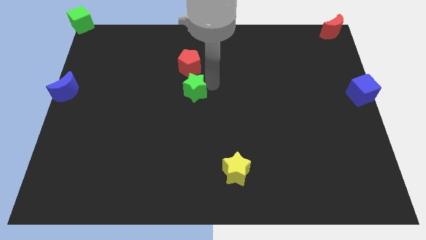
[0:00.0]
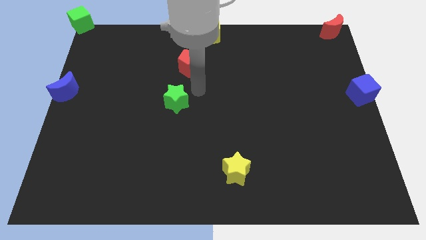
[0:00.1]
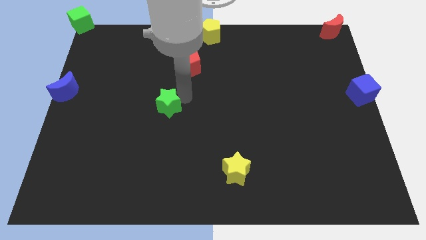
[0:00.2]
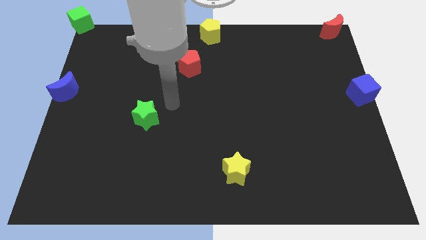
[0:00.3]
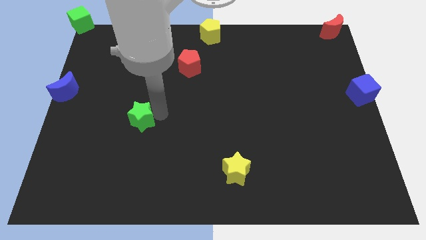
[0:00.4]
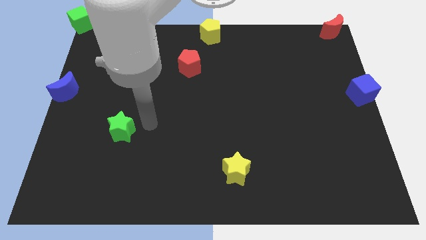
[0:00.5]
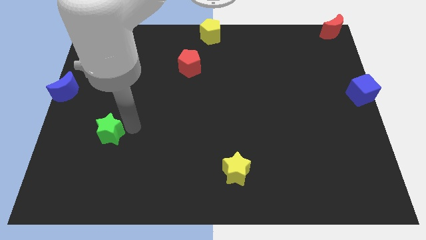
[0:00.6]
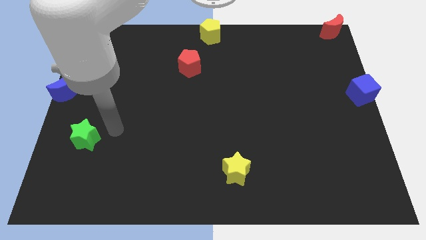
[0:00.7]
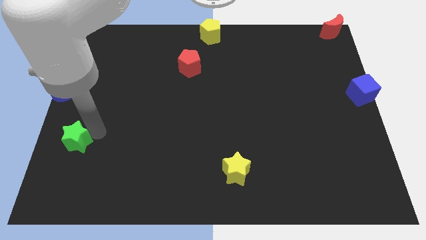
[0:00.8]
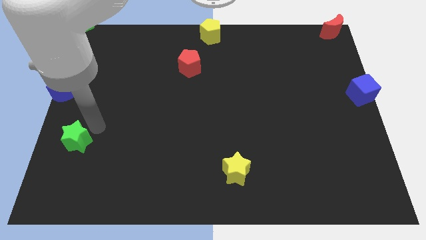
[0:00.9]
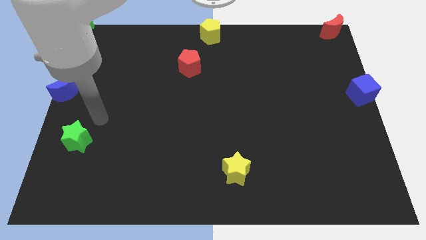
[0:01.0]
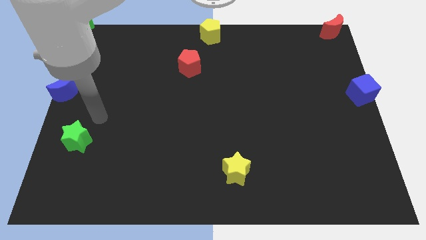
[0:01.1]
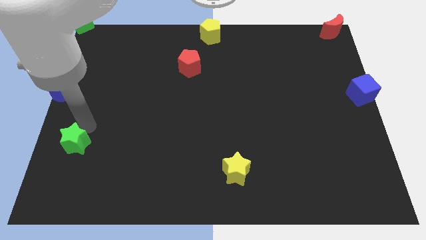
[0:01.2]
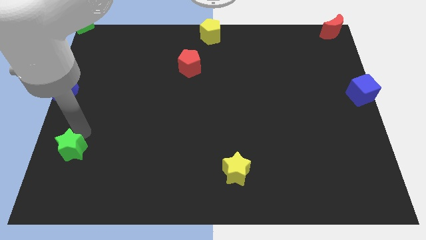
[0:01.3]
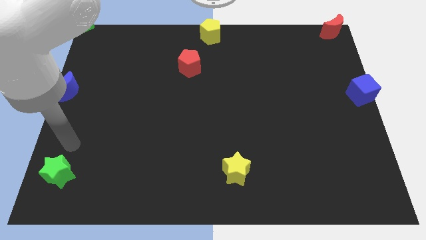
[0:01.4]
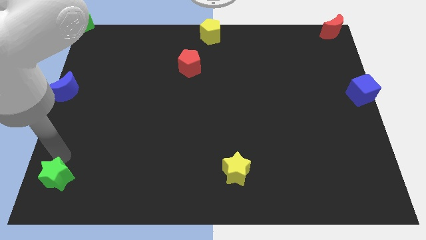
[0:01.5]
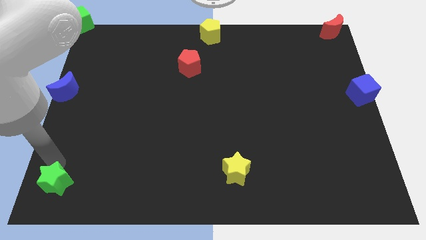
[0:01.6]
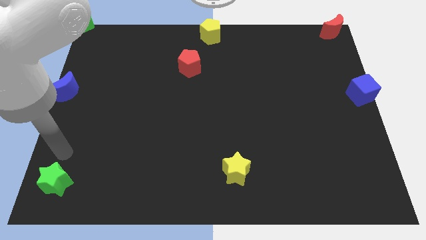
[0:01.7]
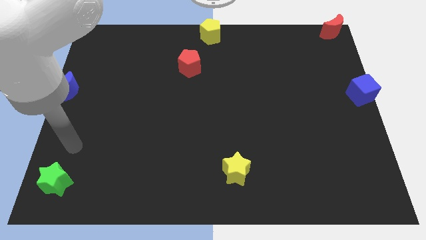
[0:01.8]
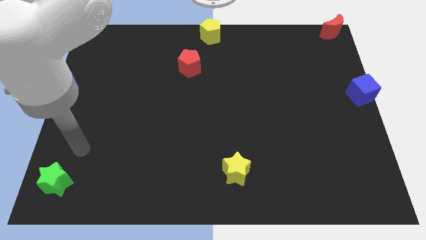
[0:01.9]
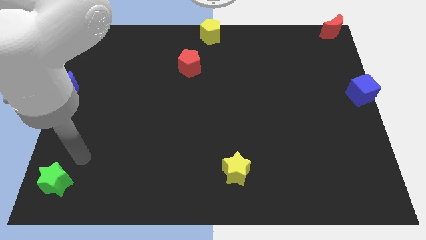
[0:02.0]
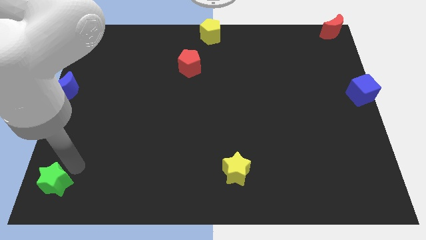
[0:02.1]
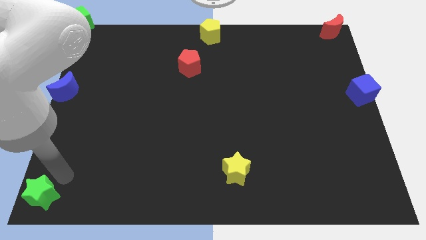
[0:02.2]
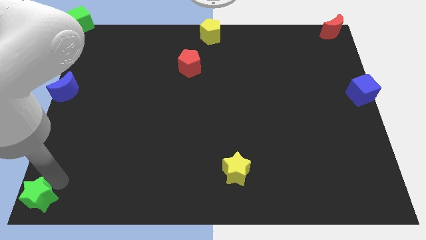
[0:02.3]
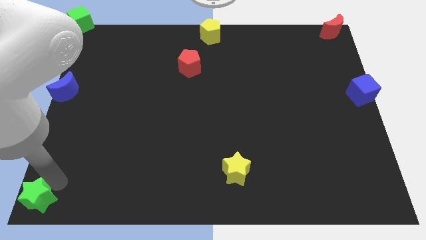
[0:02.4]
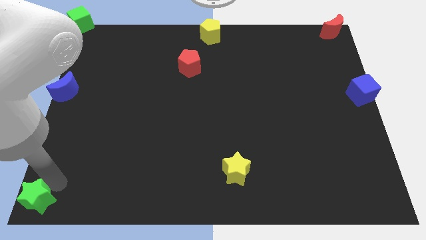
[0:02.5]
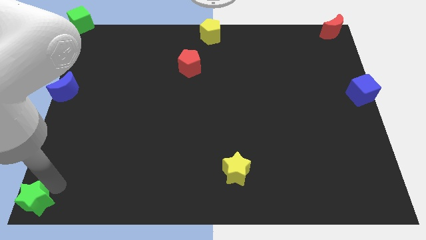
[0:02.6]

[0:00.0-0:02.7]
push the green star towards the bottom left of the board

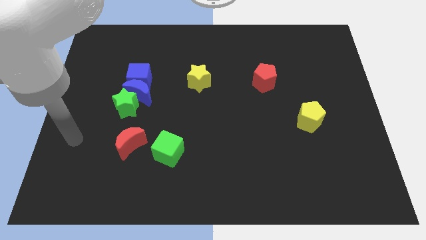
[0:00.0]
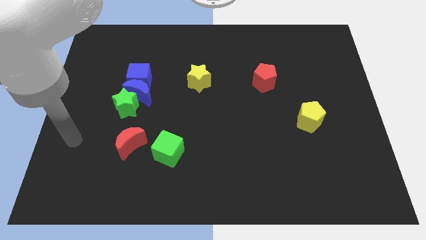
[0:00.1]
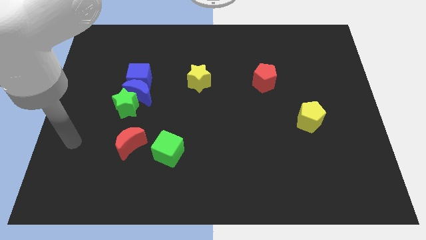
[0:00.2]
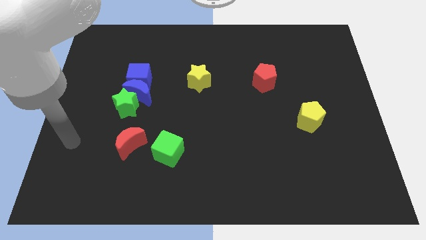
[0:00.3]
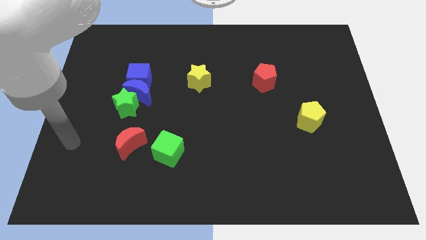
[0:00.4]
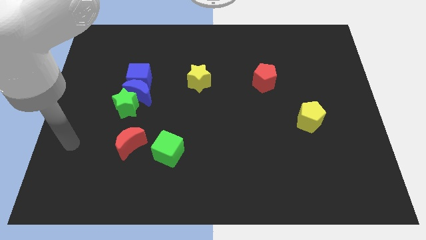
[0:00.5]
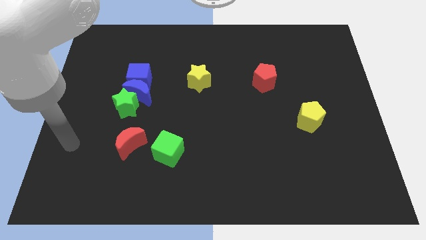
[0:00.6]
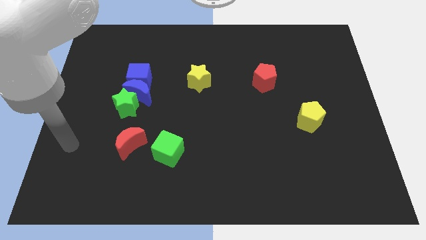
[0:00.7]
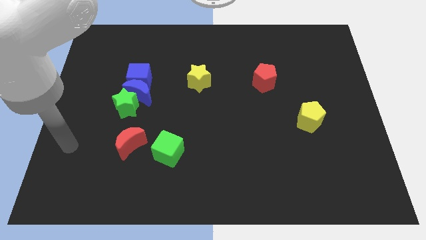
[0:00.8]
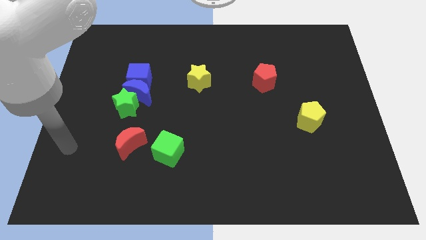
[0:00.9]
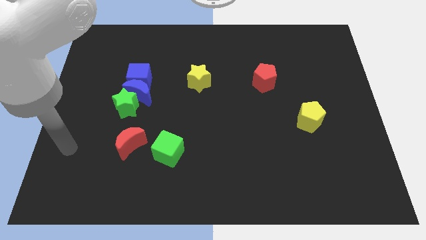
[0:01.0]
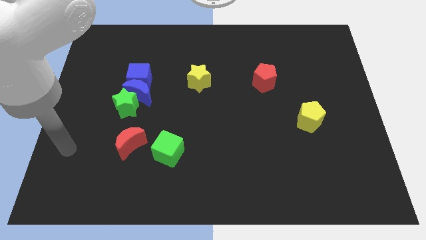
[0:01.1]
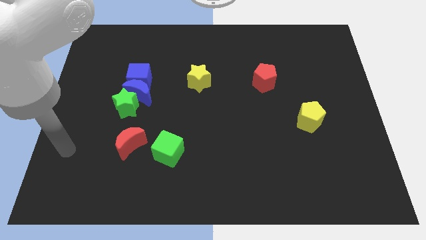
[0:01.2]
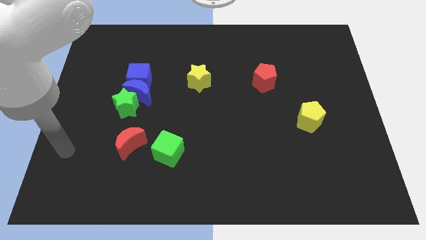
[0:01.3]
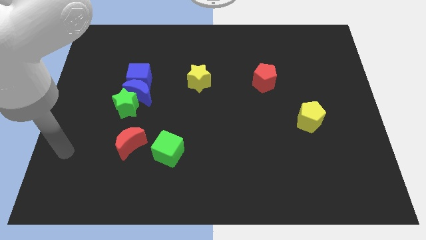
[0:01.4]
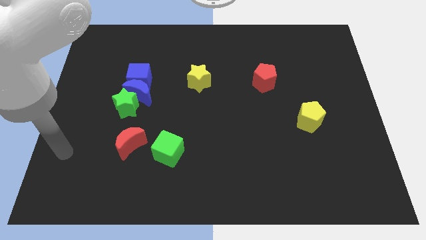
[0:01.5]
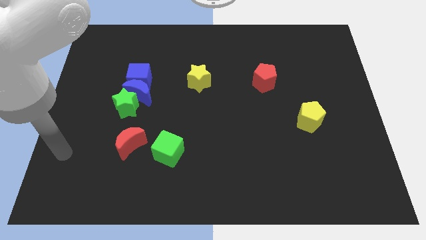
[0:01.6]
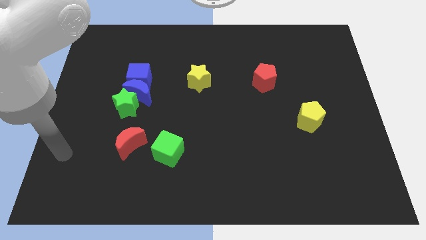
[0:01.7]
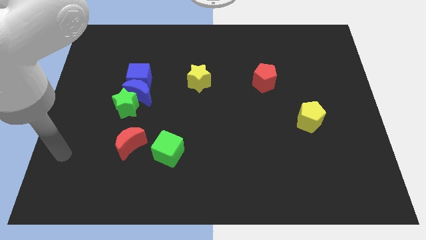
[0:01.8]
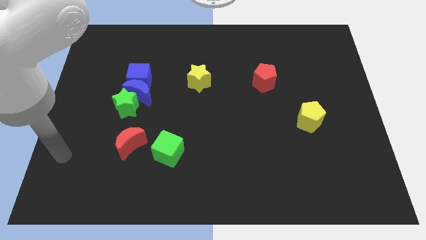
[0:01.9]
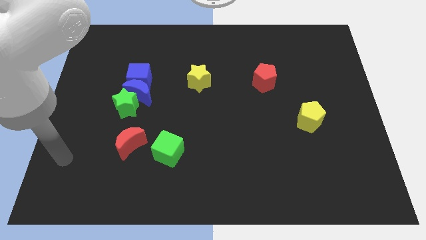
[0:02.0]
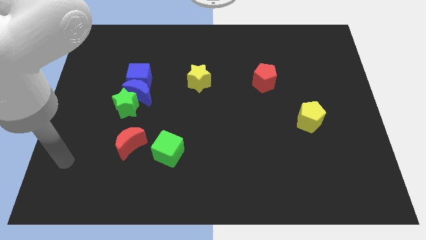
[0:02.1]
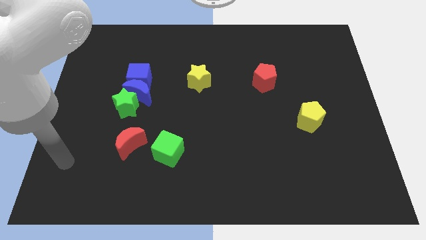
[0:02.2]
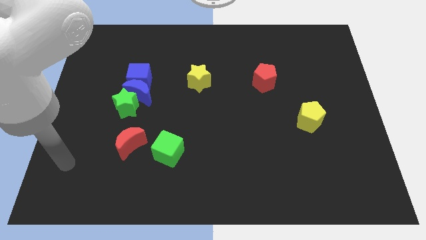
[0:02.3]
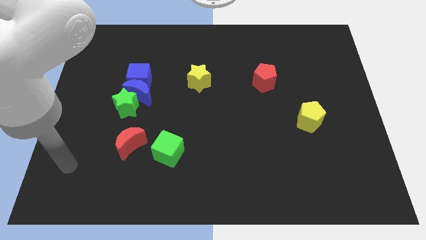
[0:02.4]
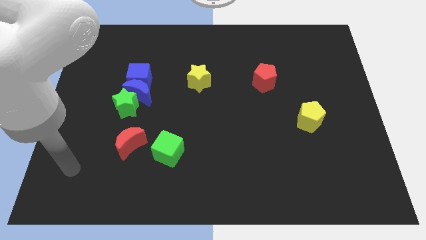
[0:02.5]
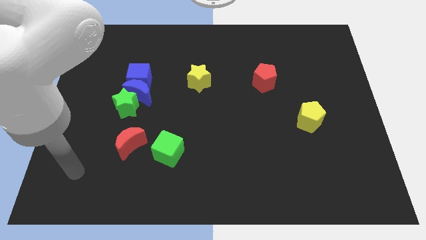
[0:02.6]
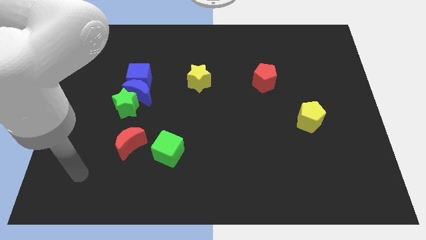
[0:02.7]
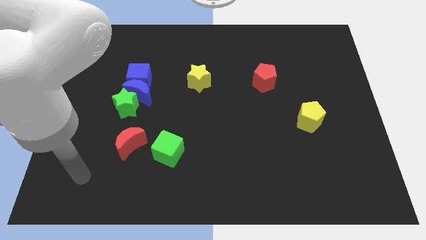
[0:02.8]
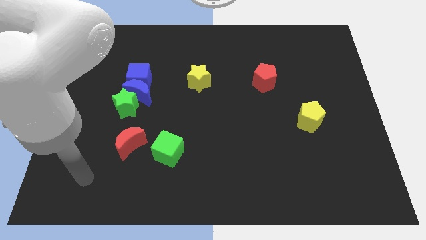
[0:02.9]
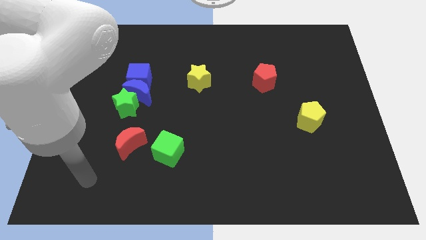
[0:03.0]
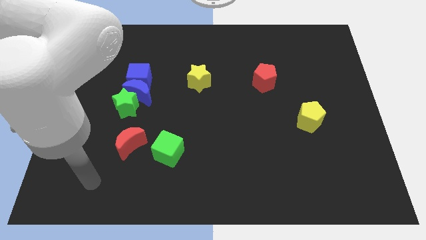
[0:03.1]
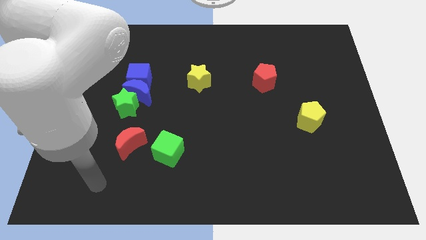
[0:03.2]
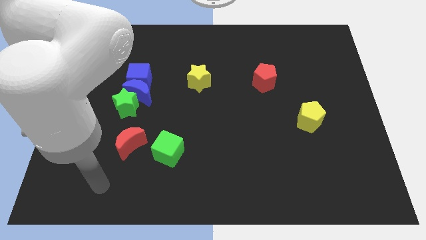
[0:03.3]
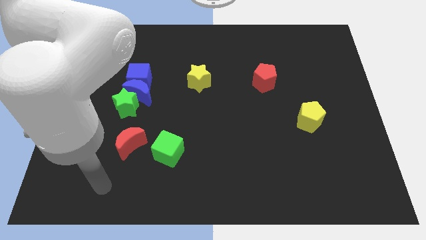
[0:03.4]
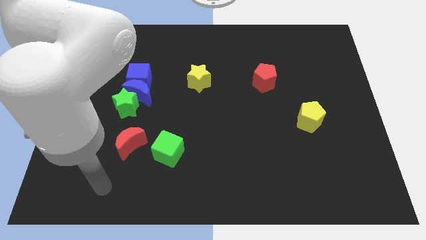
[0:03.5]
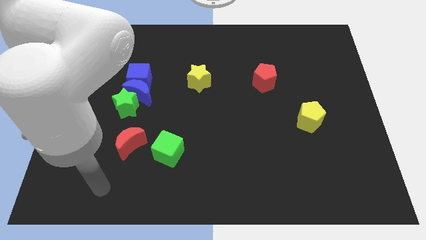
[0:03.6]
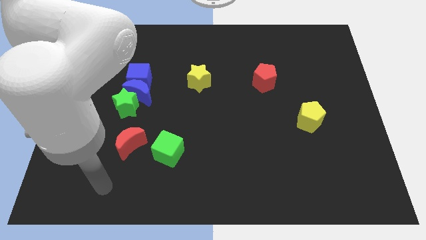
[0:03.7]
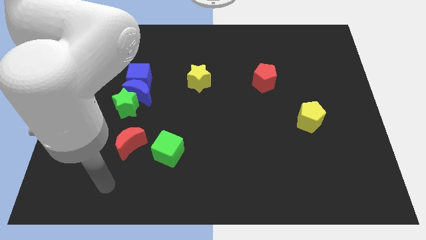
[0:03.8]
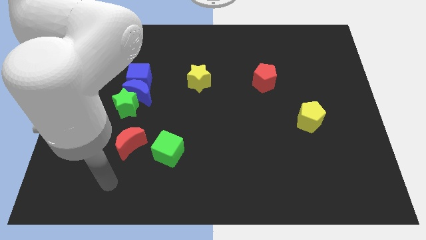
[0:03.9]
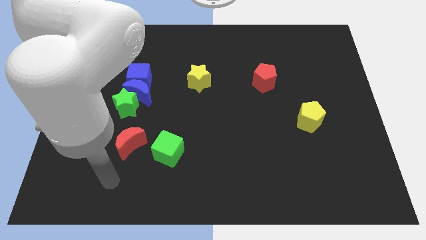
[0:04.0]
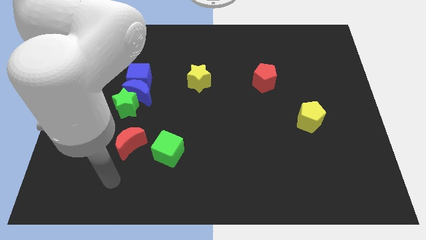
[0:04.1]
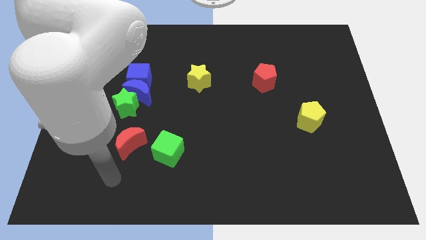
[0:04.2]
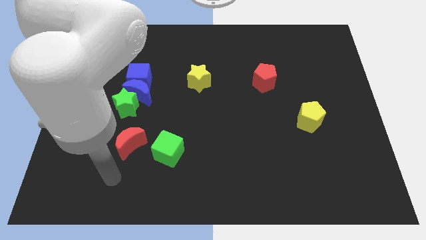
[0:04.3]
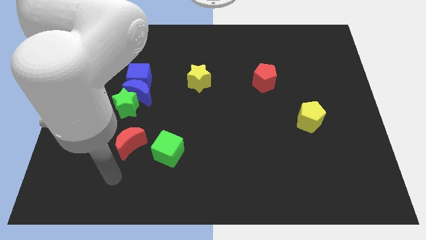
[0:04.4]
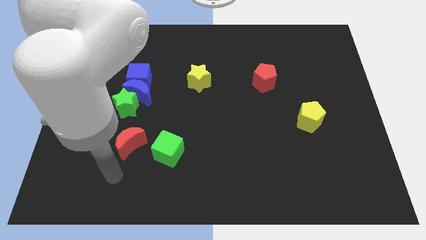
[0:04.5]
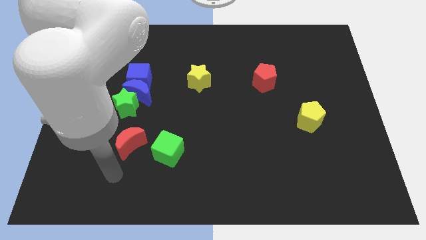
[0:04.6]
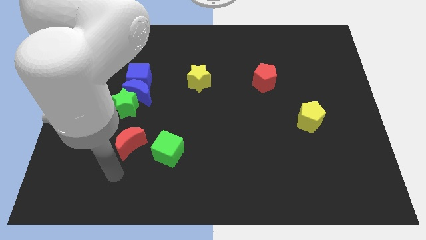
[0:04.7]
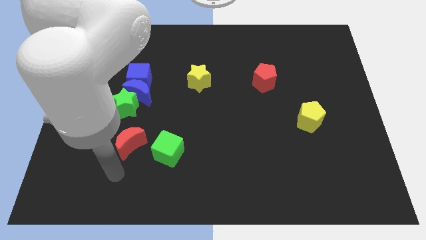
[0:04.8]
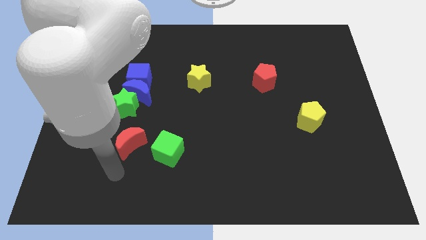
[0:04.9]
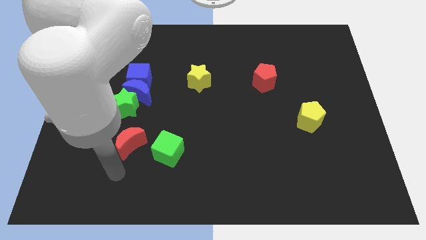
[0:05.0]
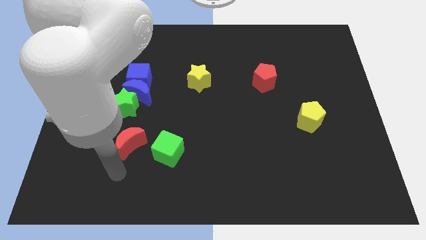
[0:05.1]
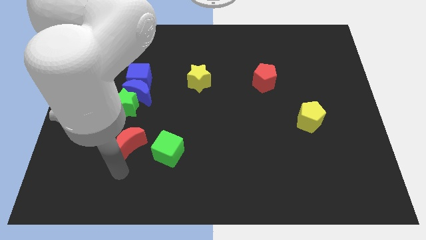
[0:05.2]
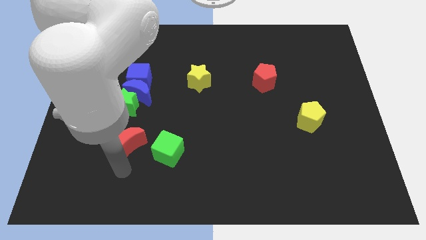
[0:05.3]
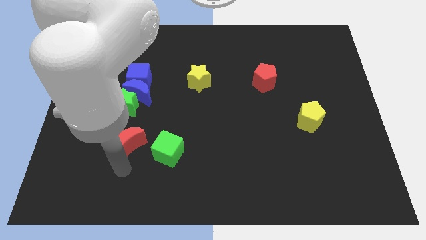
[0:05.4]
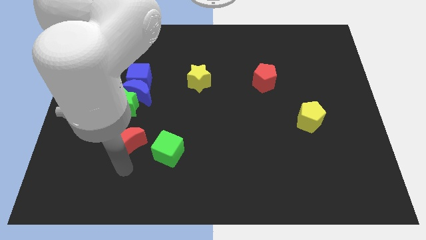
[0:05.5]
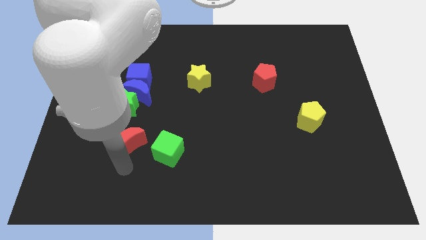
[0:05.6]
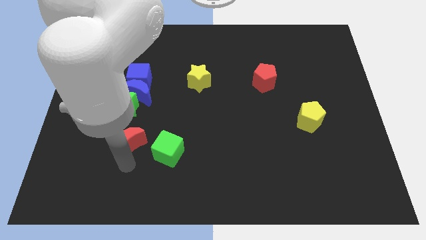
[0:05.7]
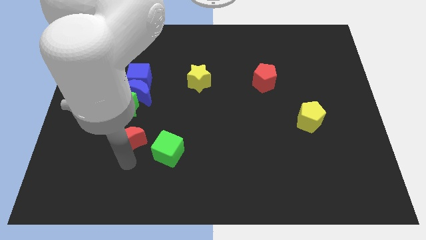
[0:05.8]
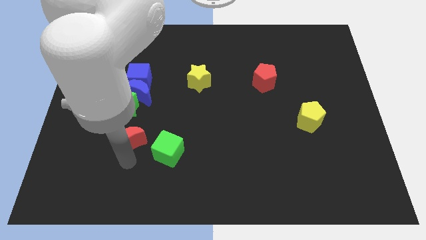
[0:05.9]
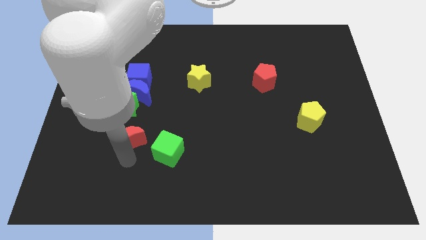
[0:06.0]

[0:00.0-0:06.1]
point your arm below red moon
